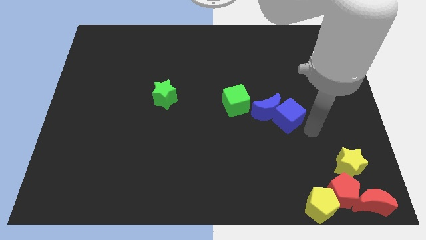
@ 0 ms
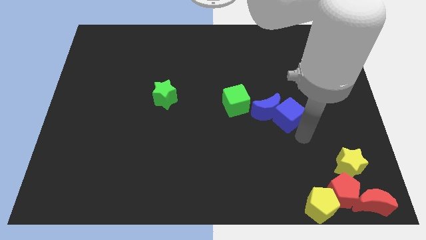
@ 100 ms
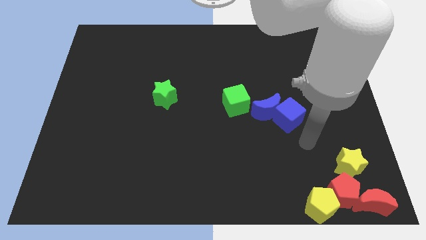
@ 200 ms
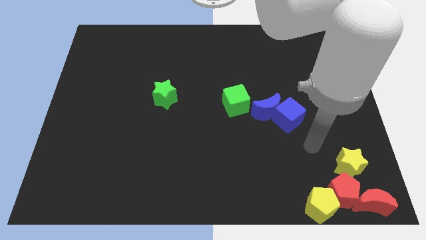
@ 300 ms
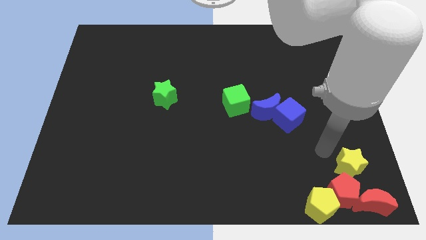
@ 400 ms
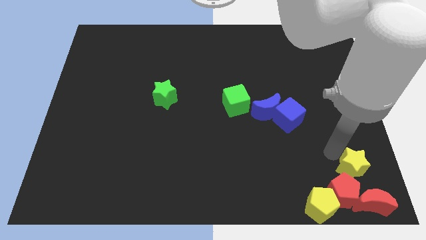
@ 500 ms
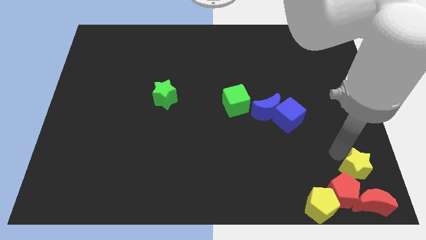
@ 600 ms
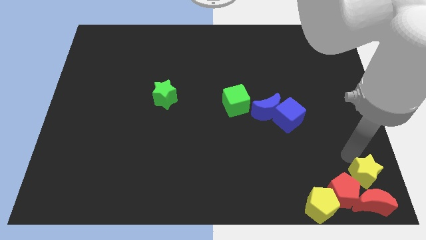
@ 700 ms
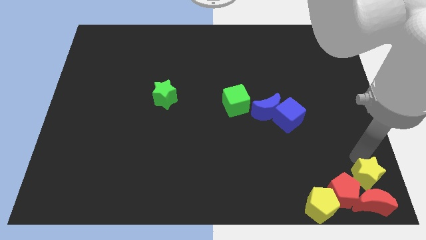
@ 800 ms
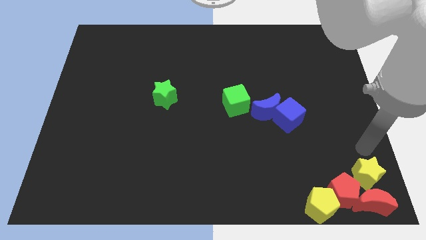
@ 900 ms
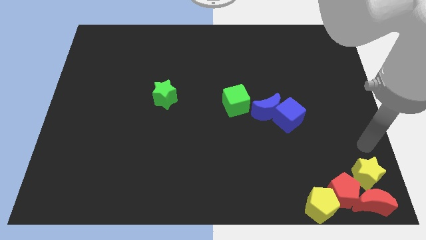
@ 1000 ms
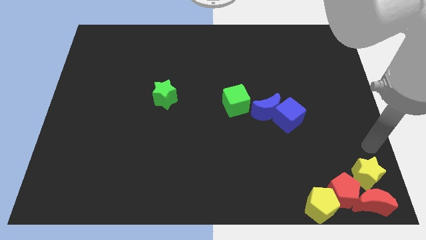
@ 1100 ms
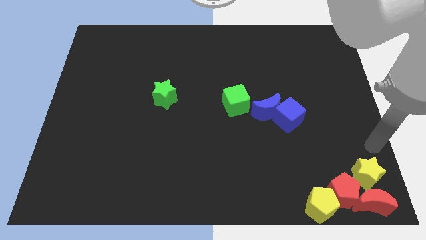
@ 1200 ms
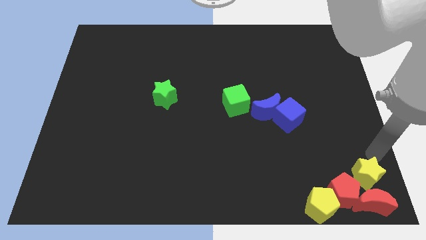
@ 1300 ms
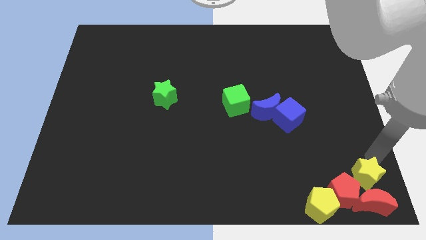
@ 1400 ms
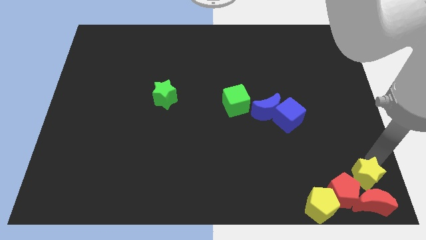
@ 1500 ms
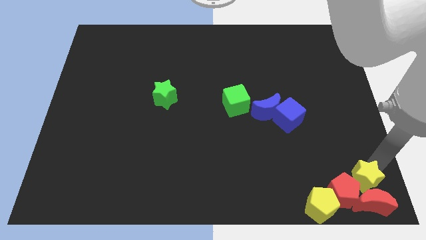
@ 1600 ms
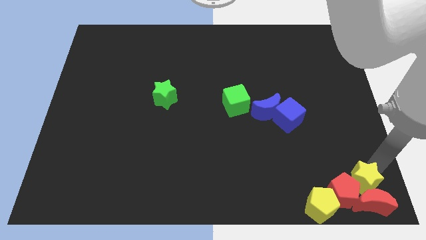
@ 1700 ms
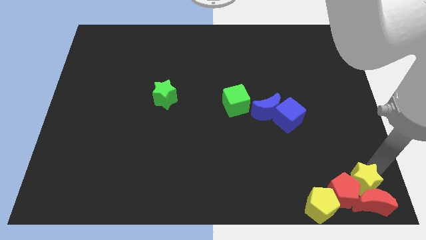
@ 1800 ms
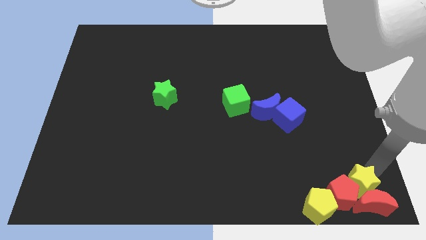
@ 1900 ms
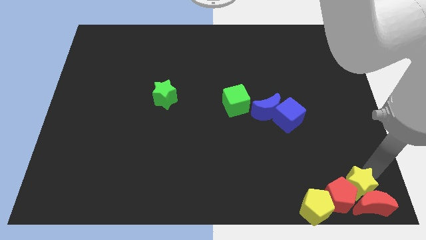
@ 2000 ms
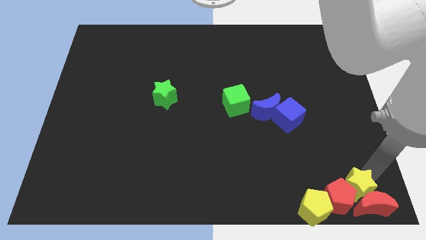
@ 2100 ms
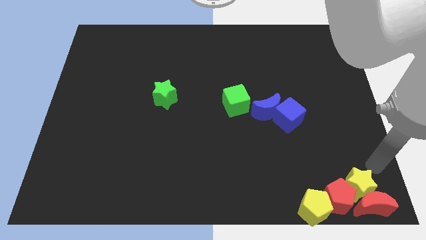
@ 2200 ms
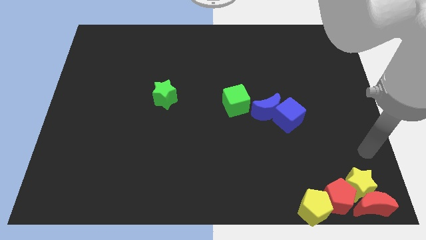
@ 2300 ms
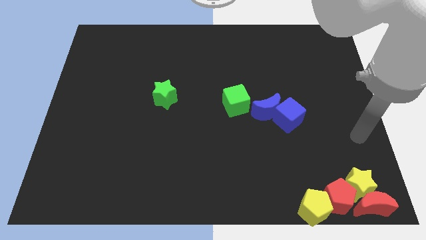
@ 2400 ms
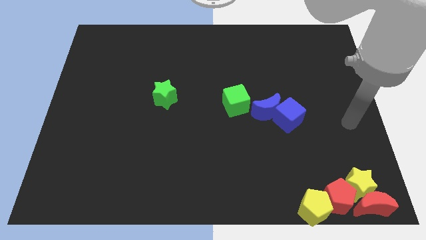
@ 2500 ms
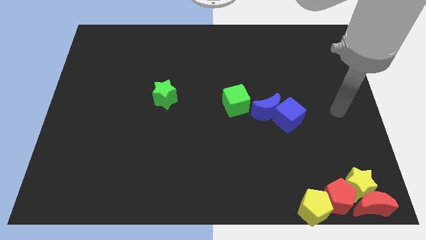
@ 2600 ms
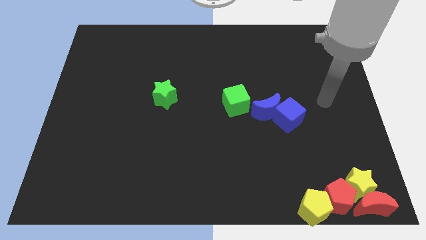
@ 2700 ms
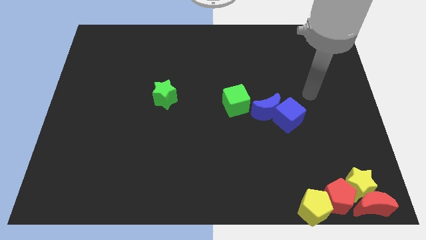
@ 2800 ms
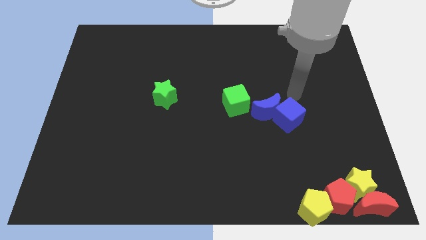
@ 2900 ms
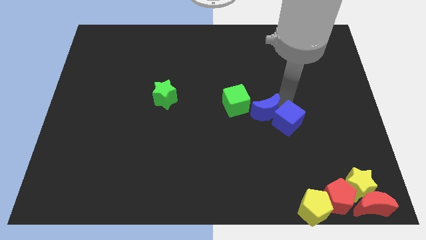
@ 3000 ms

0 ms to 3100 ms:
push the yellow star into the red pentagon

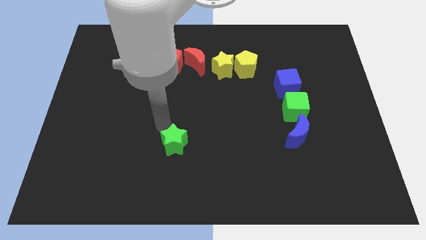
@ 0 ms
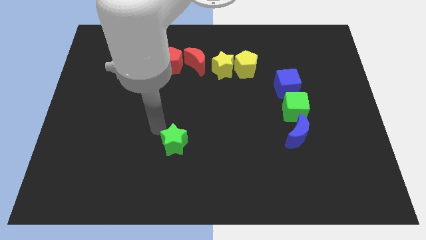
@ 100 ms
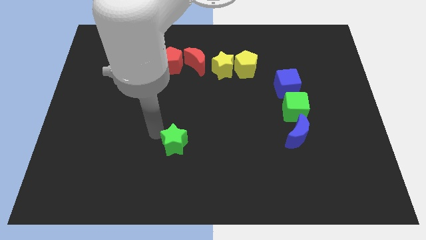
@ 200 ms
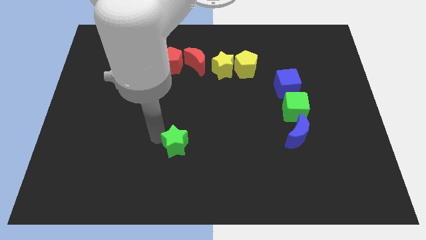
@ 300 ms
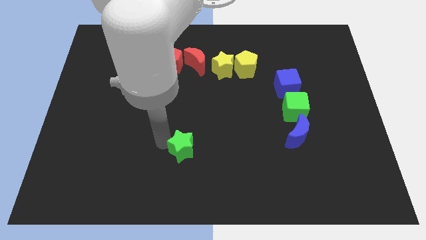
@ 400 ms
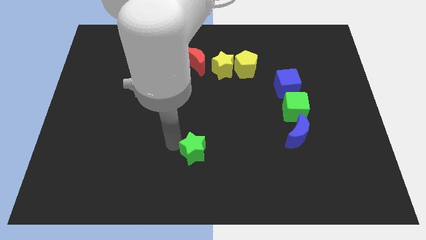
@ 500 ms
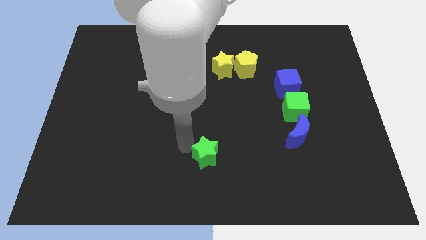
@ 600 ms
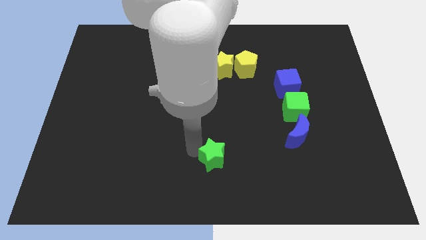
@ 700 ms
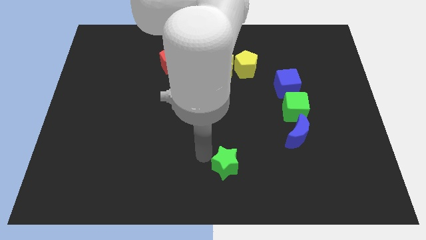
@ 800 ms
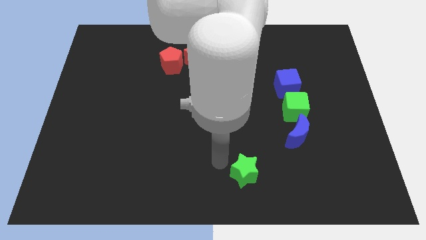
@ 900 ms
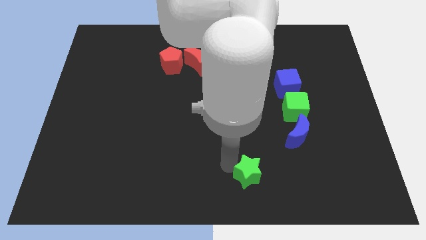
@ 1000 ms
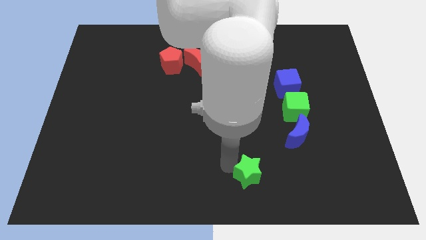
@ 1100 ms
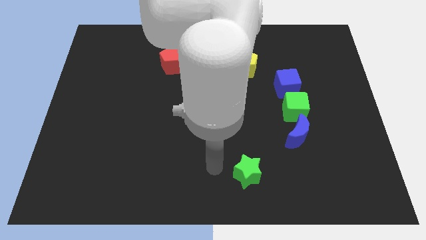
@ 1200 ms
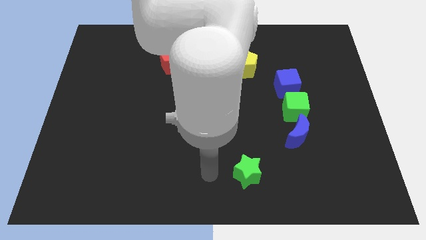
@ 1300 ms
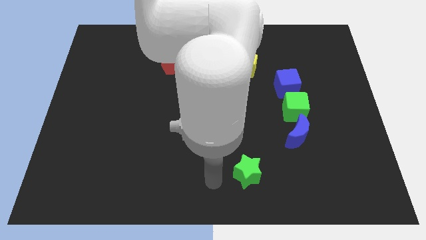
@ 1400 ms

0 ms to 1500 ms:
place the green star parallel towards blue crescent

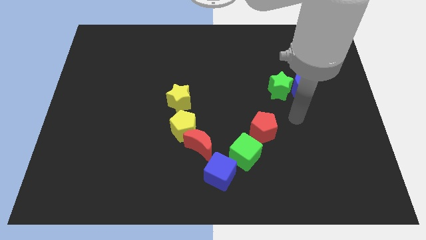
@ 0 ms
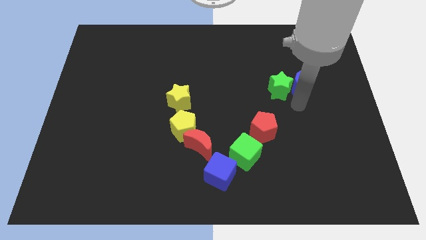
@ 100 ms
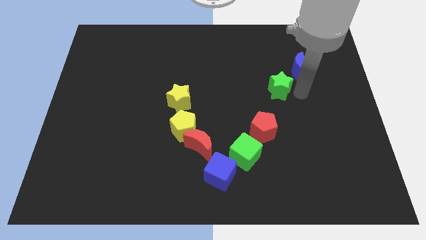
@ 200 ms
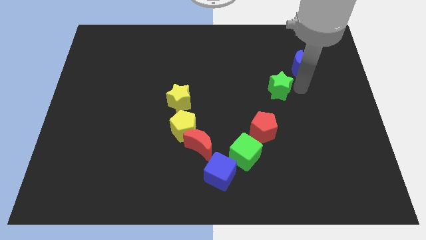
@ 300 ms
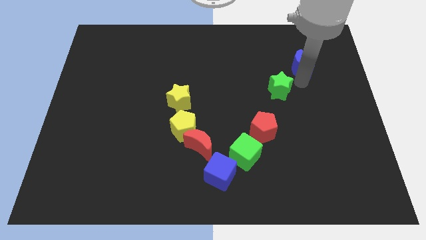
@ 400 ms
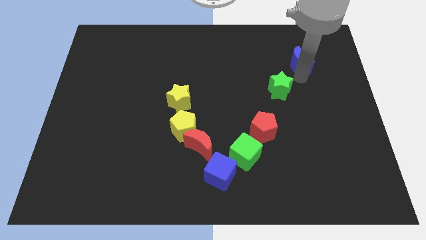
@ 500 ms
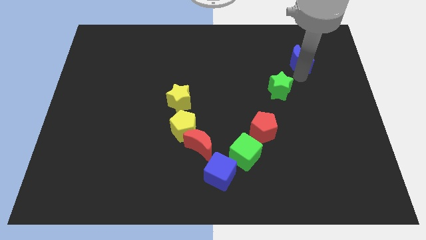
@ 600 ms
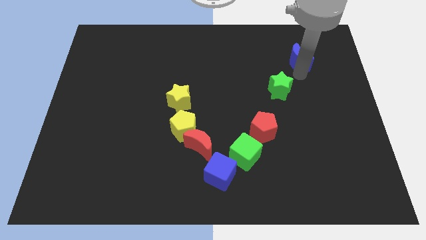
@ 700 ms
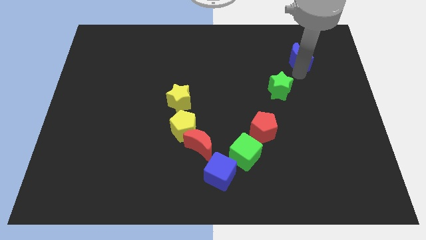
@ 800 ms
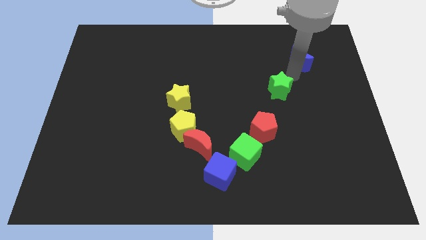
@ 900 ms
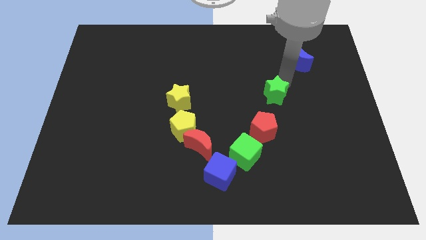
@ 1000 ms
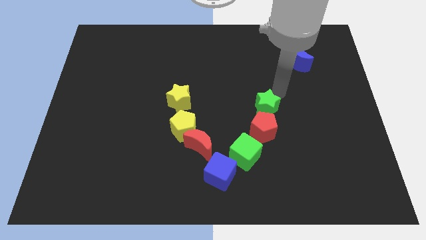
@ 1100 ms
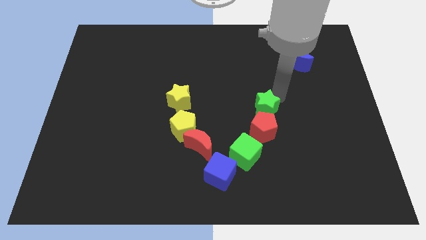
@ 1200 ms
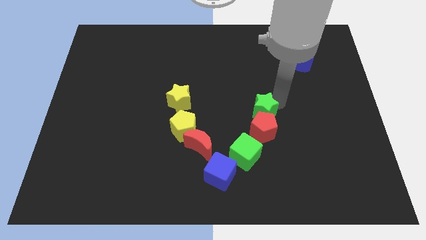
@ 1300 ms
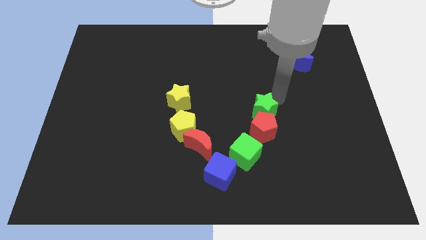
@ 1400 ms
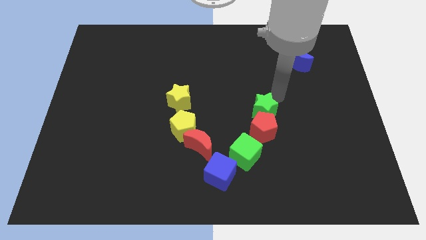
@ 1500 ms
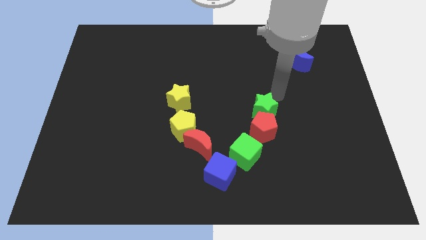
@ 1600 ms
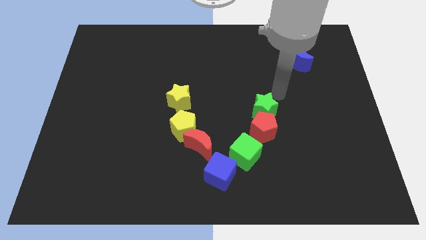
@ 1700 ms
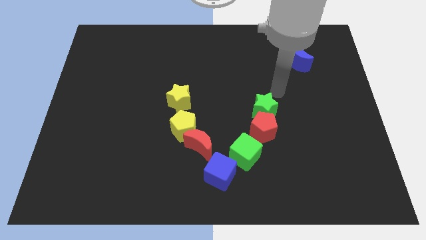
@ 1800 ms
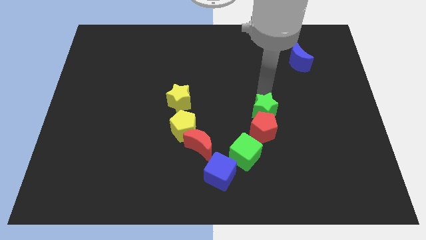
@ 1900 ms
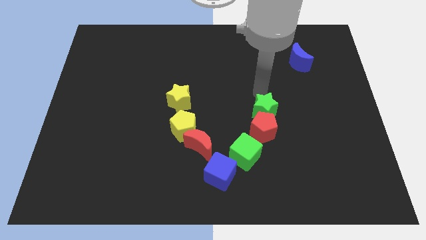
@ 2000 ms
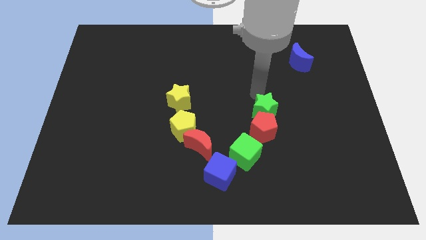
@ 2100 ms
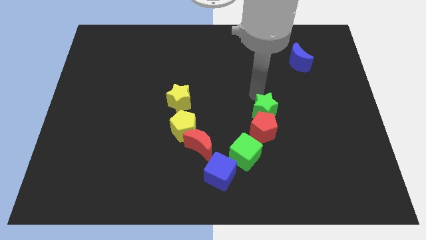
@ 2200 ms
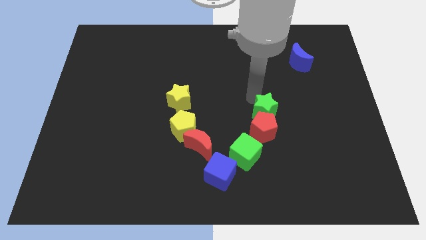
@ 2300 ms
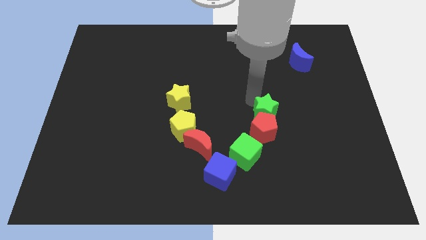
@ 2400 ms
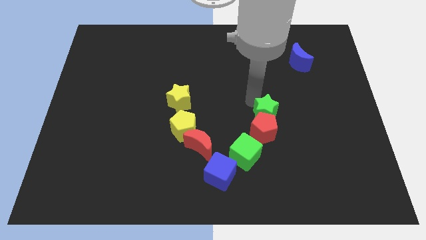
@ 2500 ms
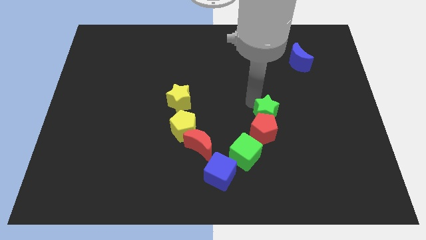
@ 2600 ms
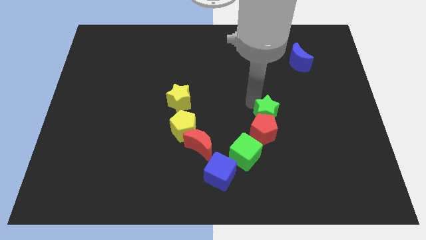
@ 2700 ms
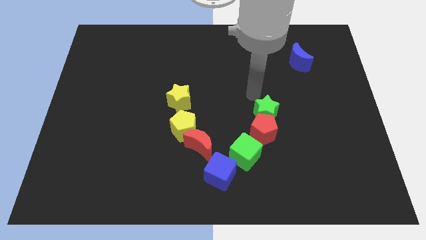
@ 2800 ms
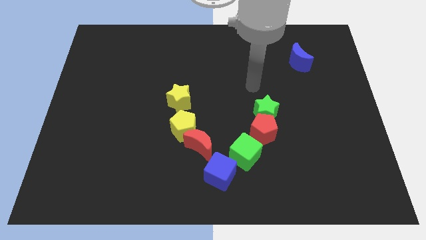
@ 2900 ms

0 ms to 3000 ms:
move the green star into the top side of the red pentagon

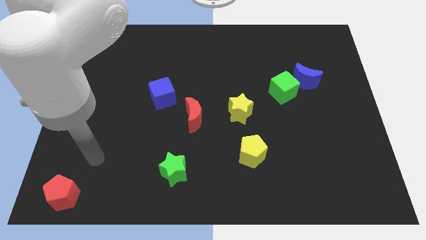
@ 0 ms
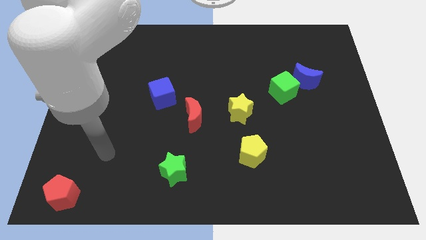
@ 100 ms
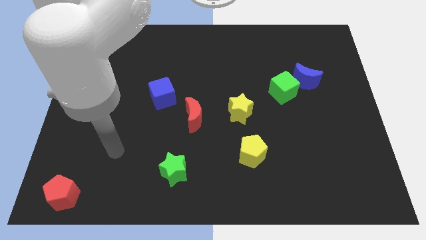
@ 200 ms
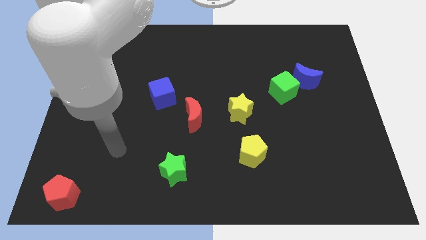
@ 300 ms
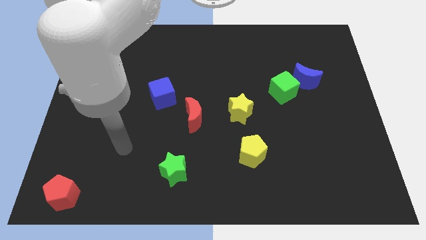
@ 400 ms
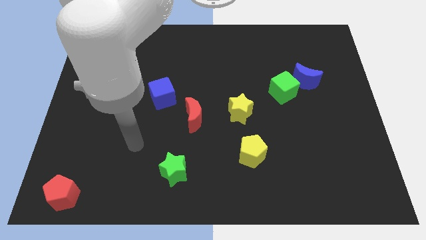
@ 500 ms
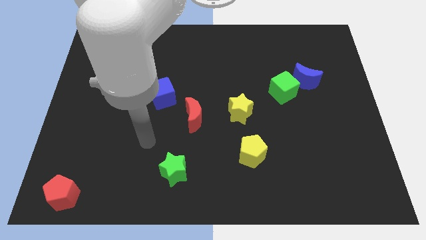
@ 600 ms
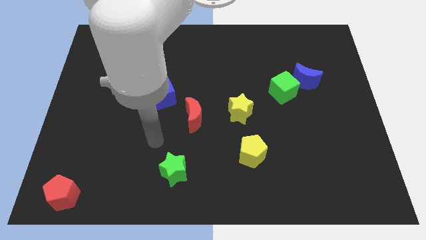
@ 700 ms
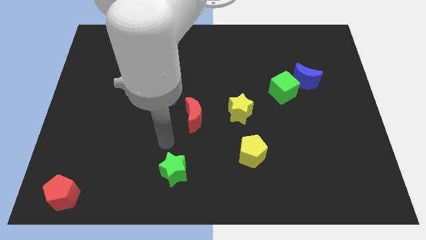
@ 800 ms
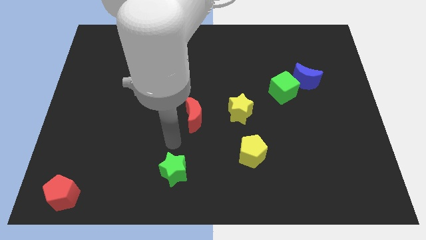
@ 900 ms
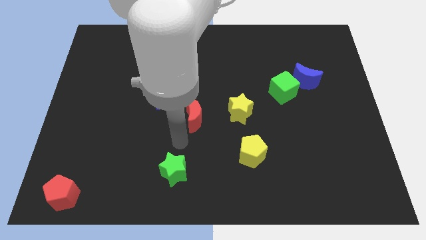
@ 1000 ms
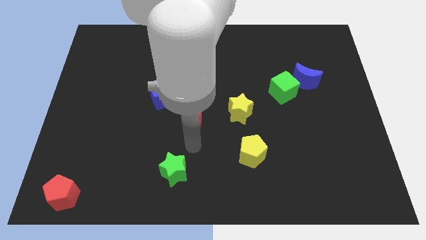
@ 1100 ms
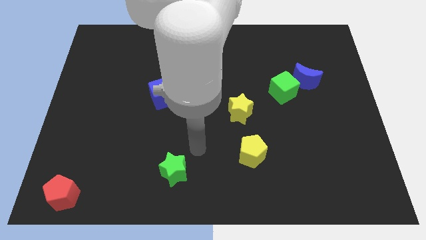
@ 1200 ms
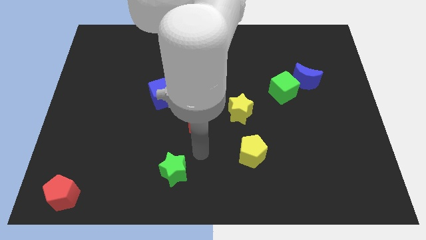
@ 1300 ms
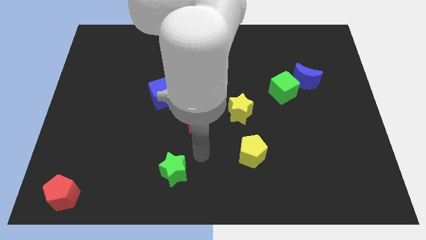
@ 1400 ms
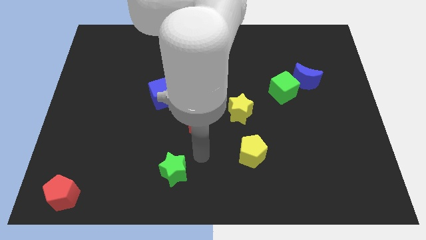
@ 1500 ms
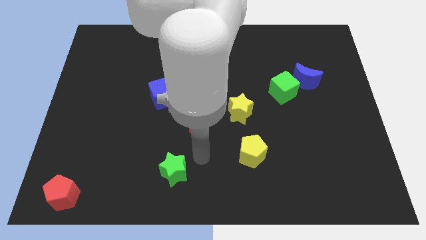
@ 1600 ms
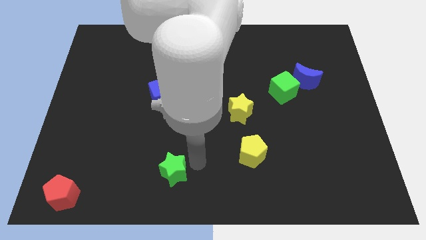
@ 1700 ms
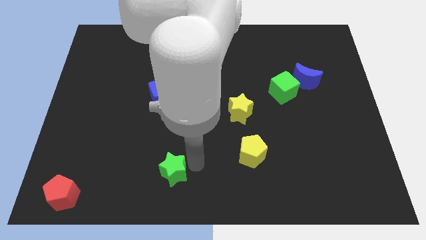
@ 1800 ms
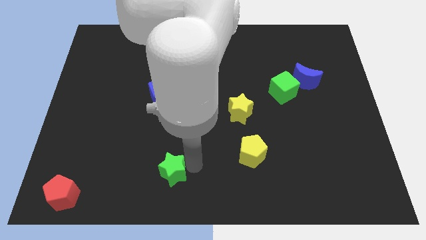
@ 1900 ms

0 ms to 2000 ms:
put your arm on right of the green star
